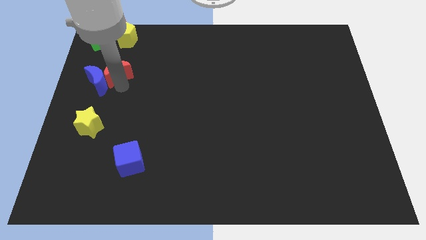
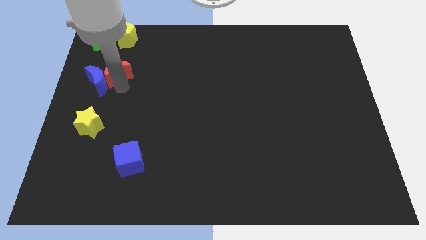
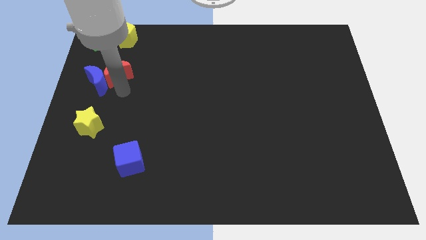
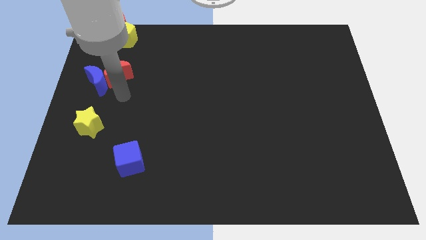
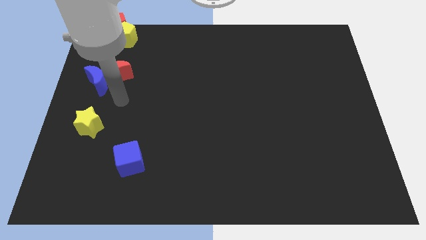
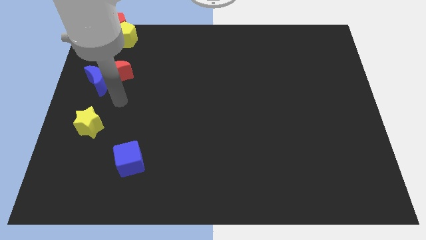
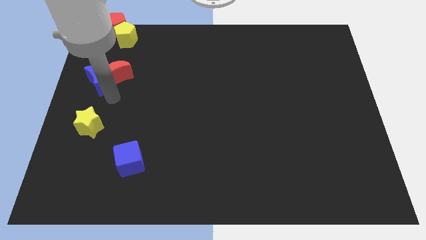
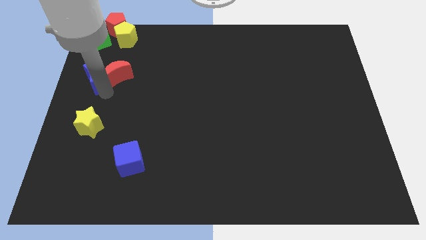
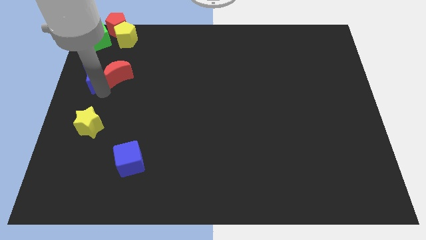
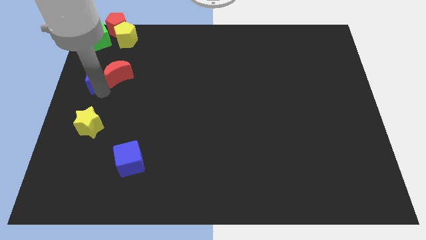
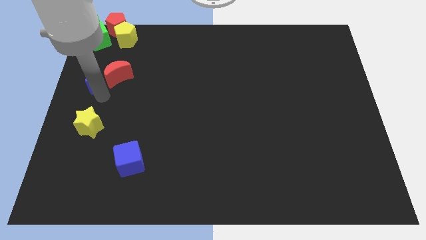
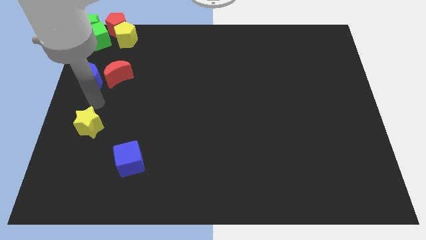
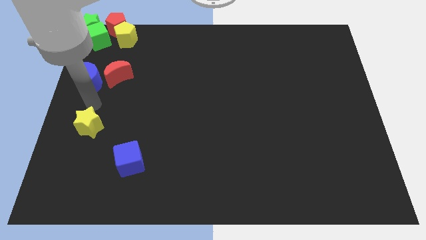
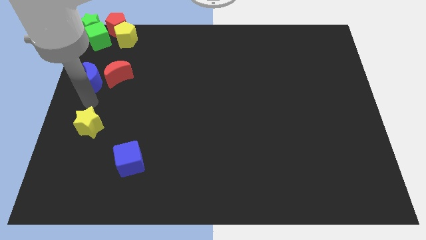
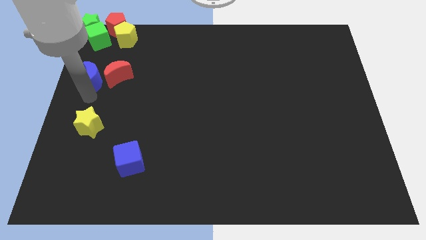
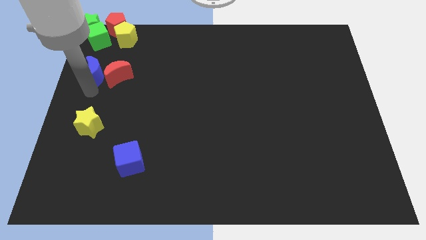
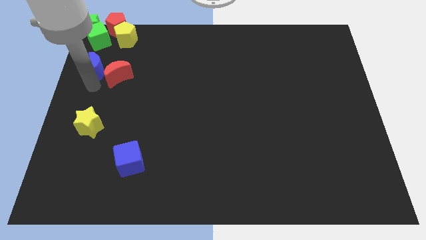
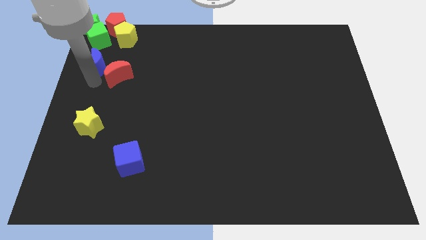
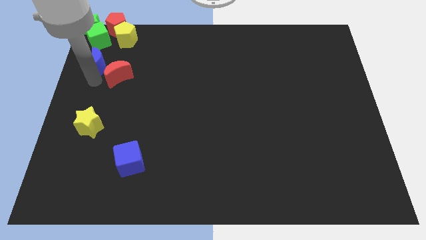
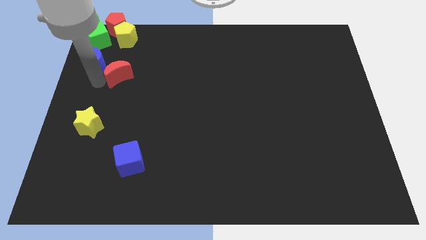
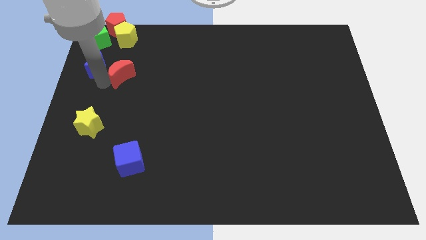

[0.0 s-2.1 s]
place the blue crescent below the green cube

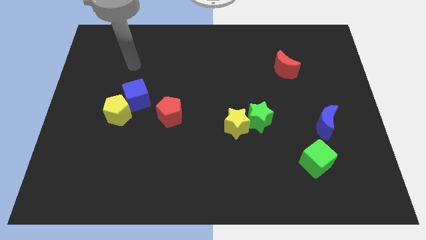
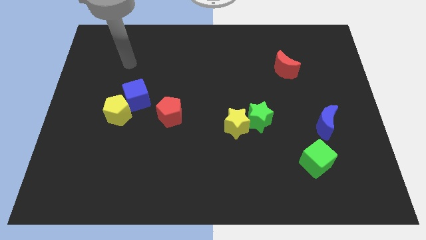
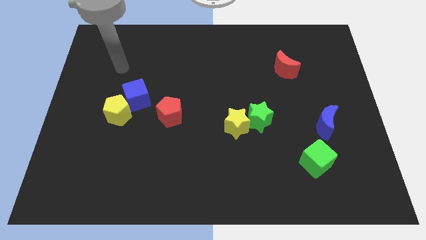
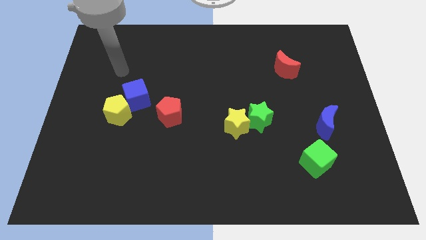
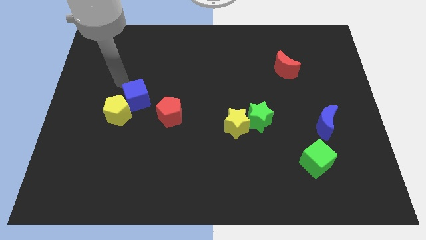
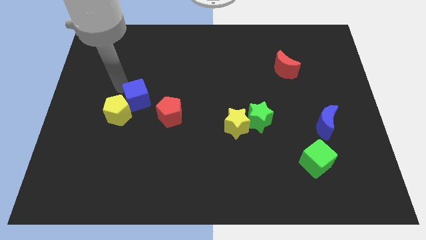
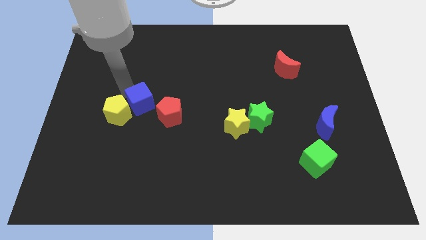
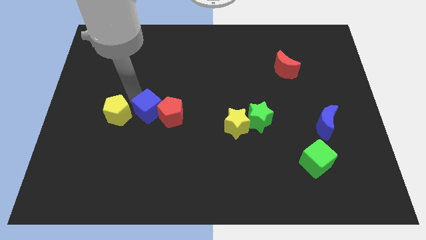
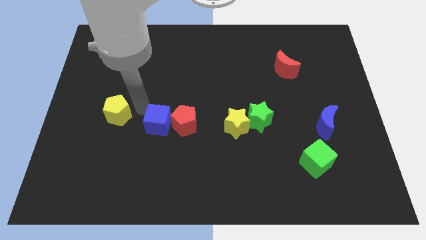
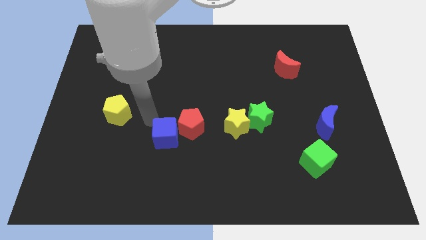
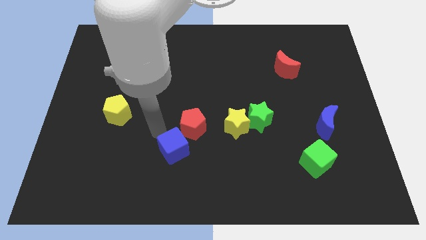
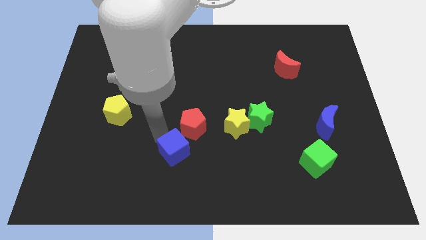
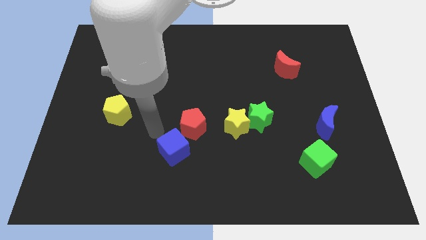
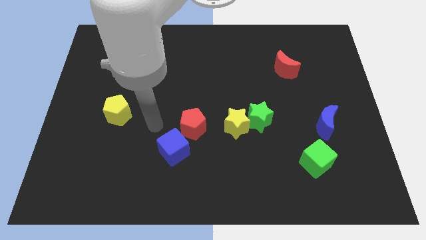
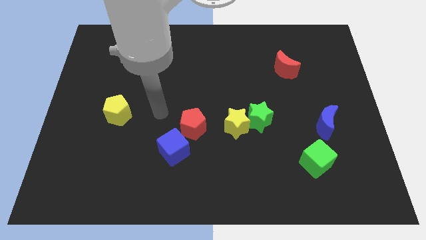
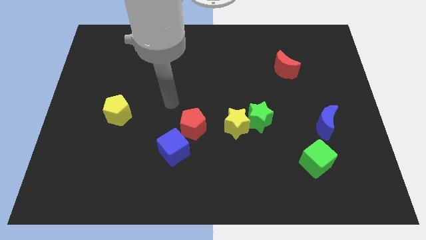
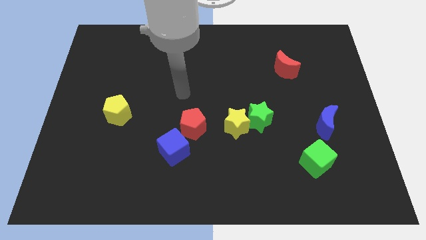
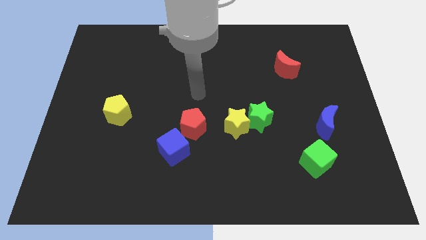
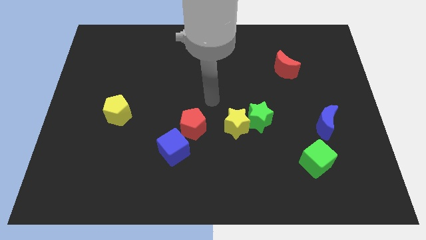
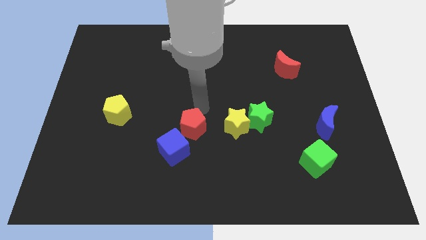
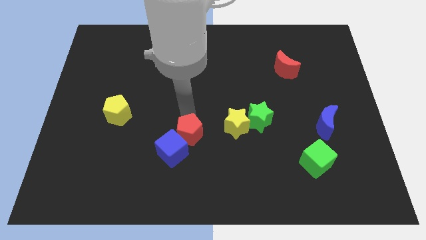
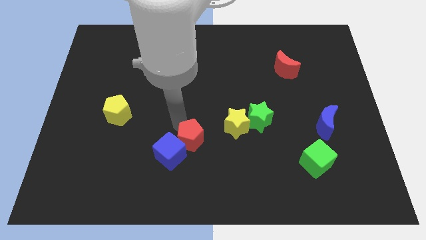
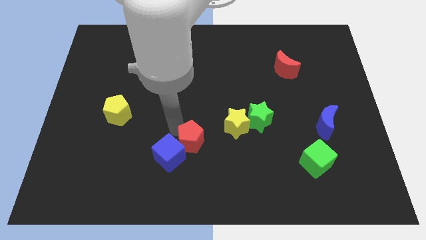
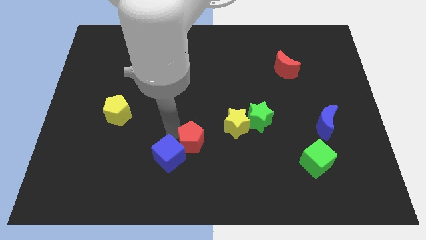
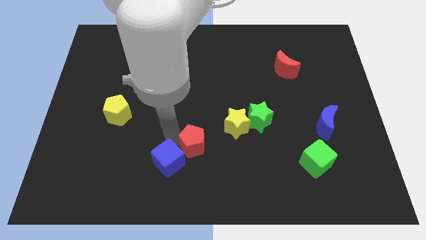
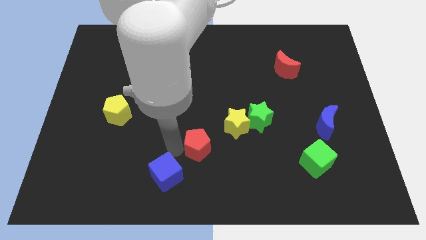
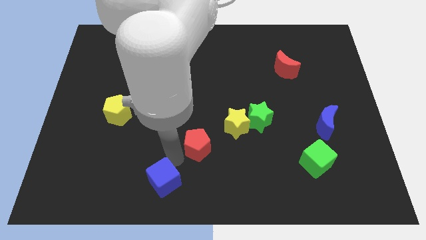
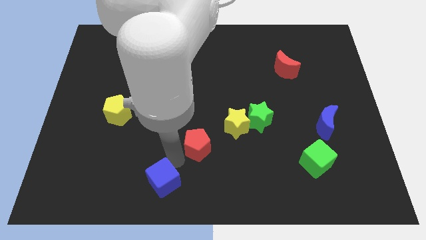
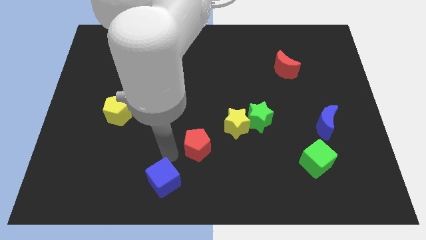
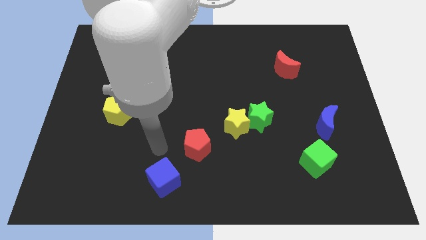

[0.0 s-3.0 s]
move the blue cube slightly towards the bottom center

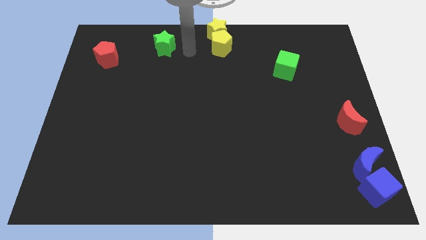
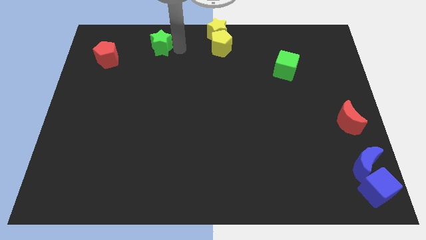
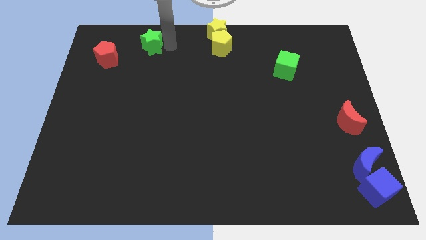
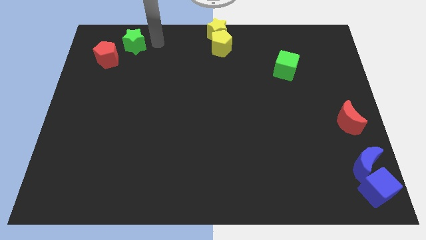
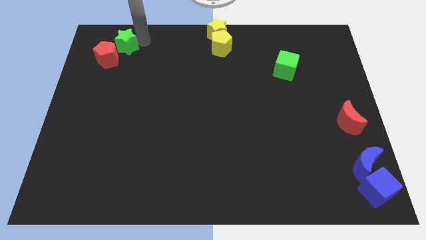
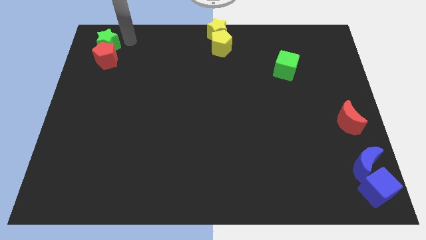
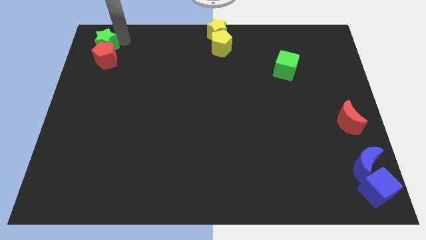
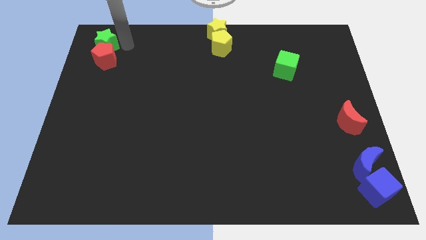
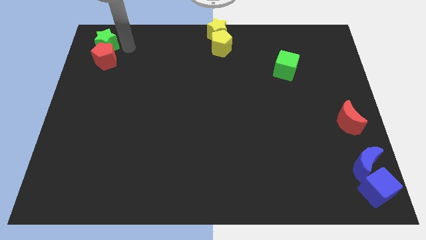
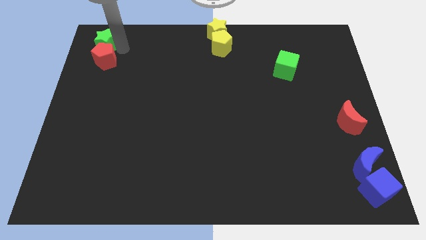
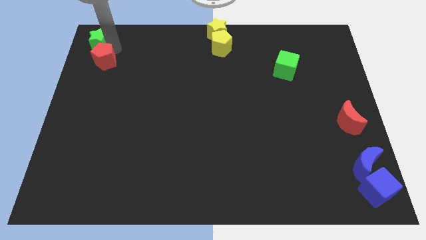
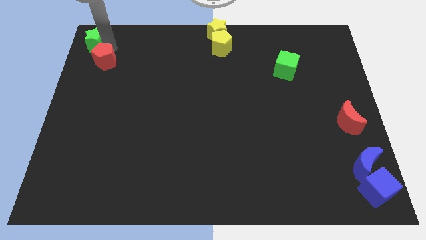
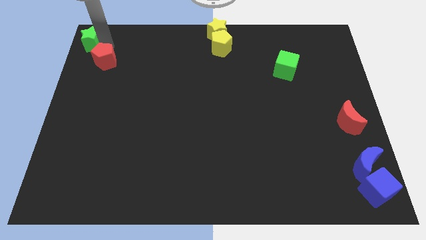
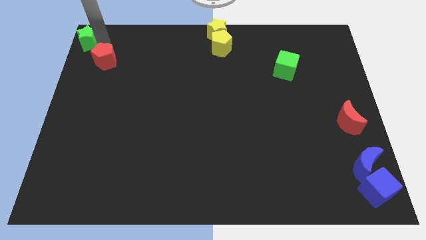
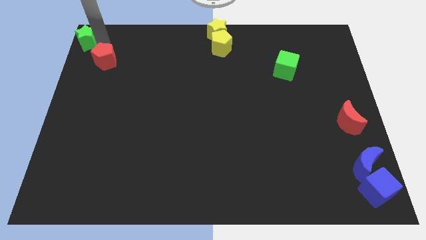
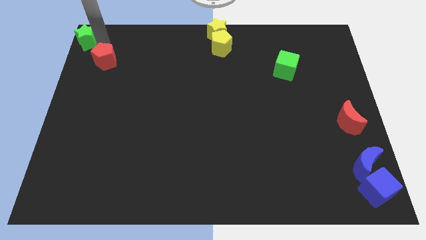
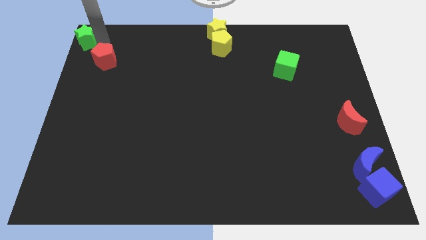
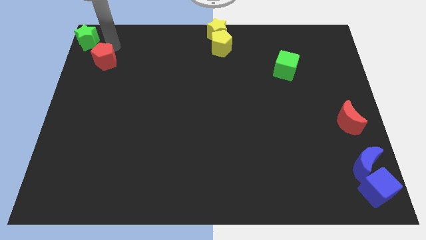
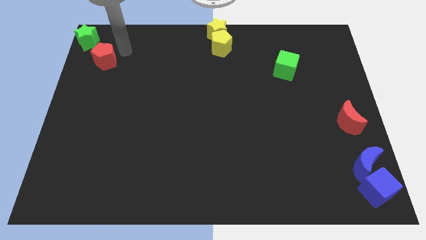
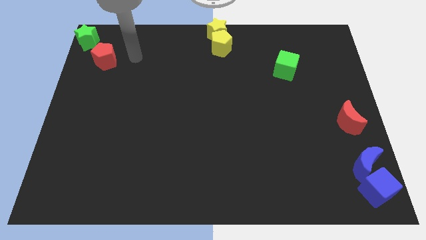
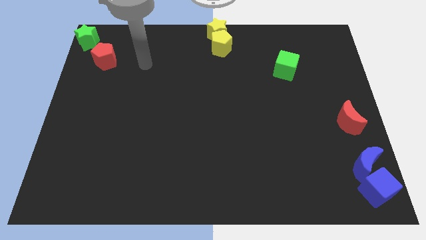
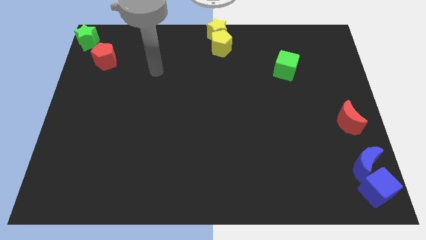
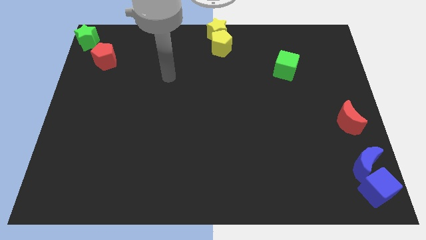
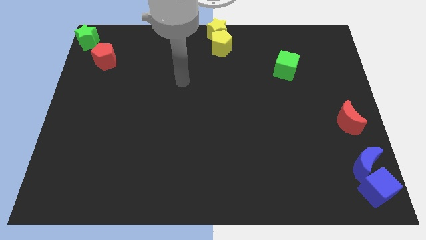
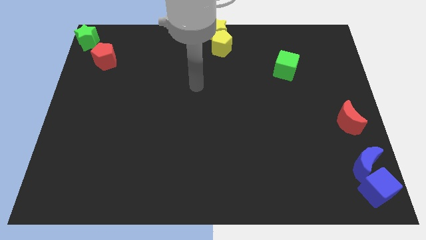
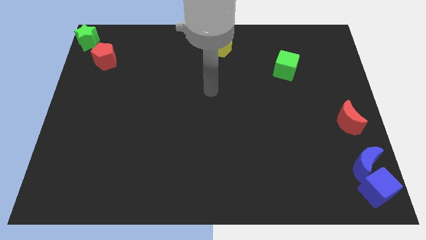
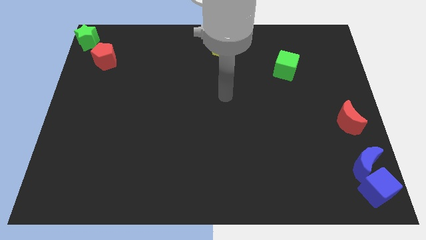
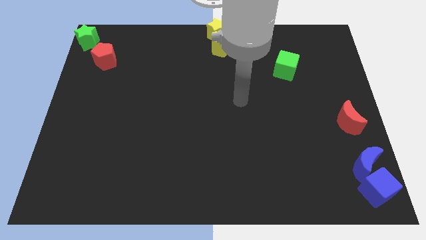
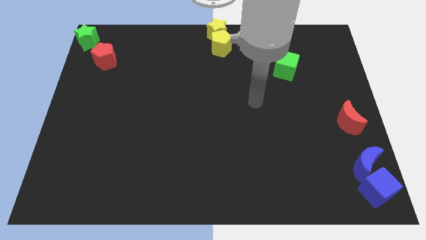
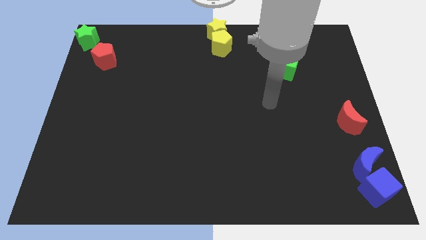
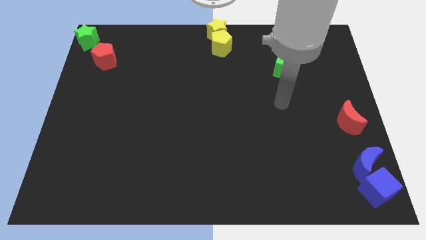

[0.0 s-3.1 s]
push green star at top left corner

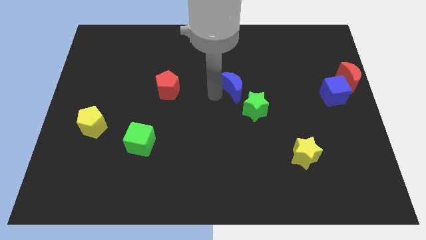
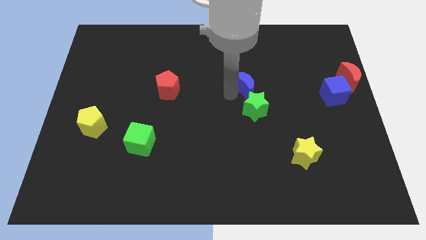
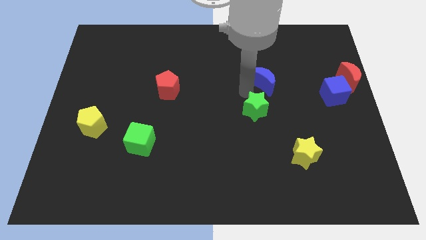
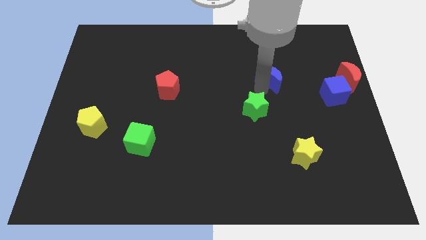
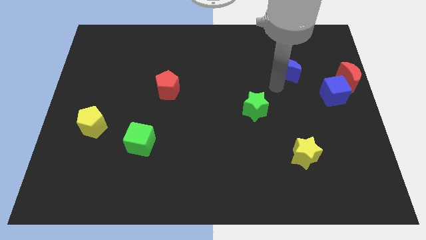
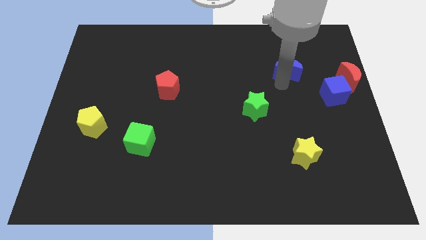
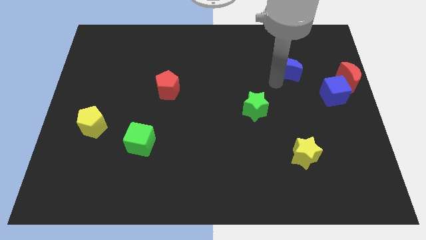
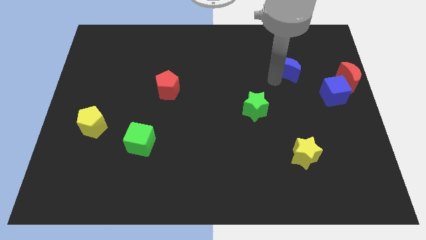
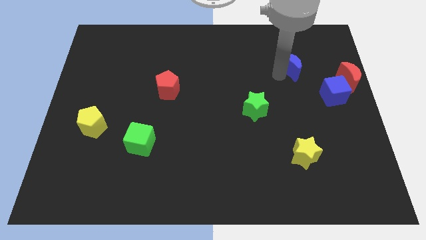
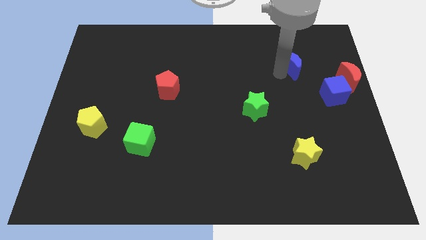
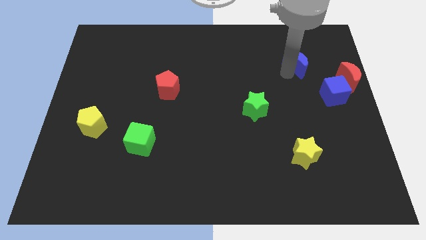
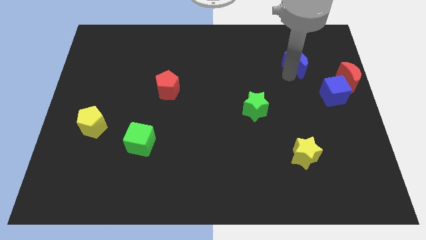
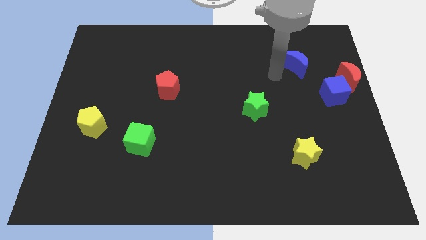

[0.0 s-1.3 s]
move the blue crescent to the top right of the green star
